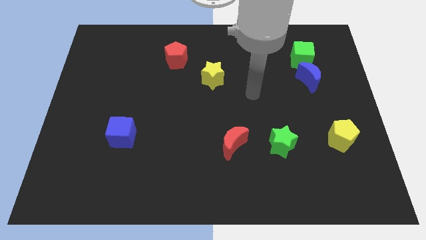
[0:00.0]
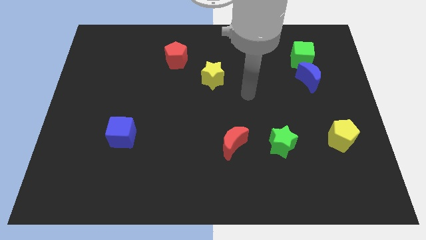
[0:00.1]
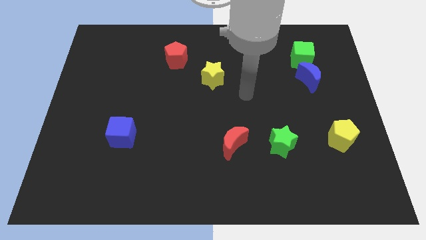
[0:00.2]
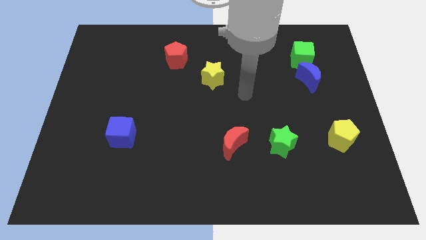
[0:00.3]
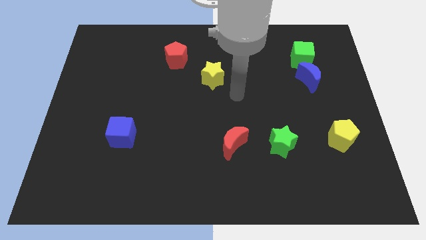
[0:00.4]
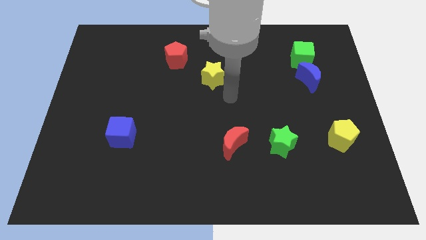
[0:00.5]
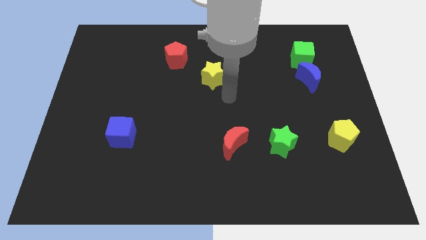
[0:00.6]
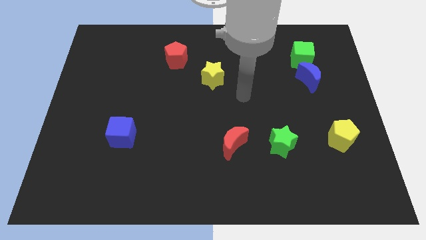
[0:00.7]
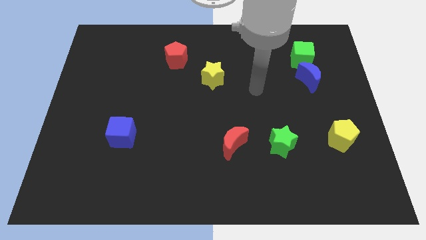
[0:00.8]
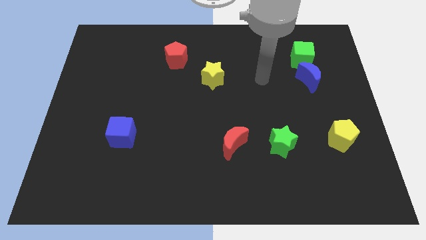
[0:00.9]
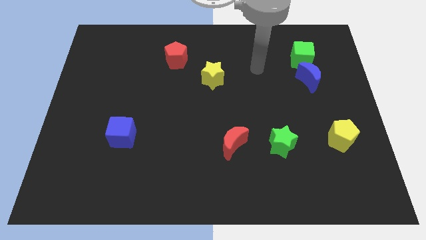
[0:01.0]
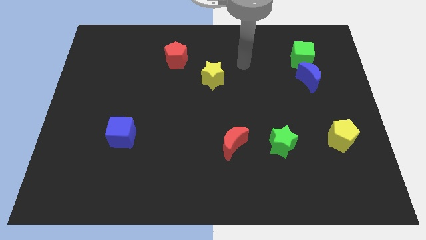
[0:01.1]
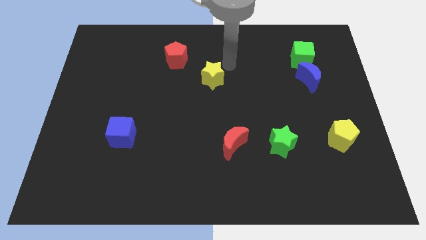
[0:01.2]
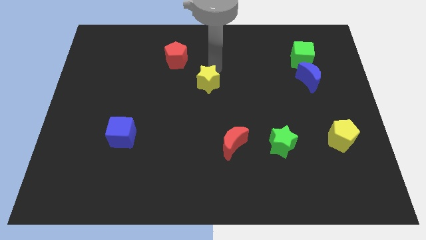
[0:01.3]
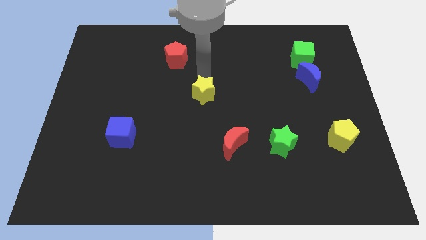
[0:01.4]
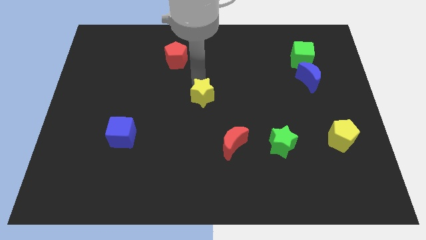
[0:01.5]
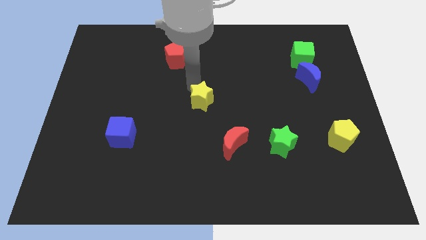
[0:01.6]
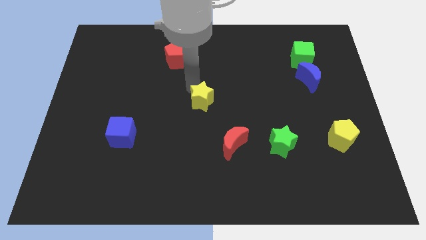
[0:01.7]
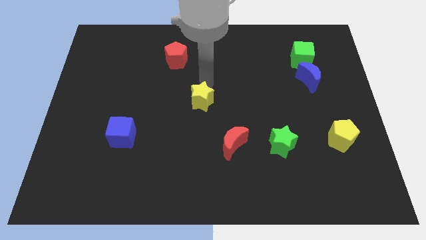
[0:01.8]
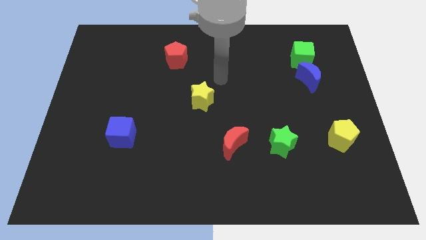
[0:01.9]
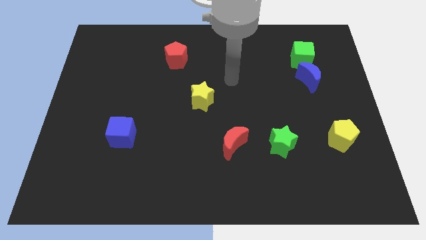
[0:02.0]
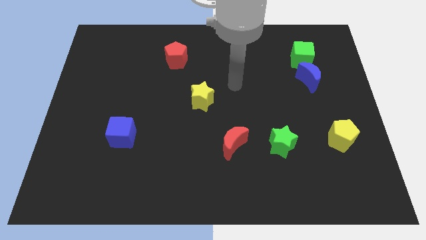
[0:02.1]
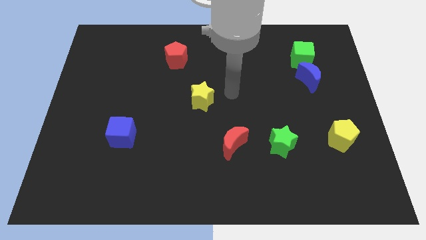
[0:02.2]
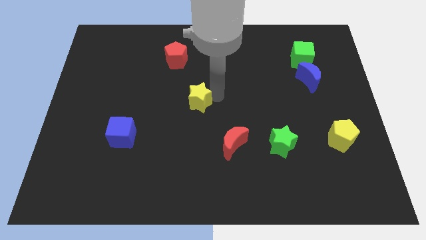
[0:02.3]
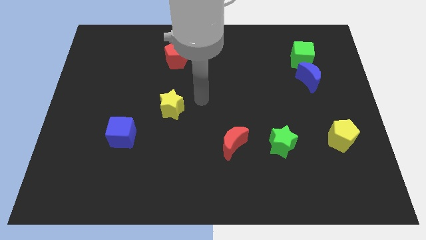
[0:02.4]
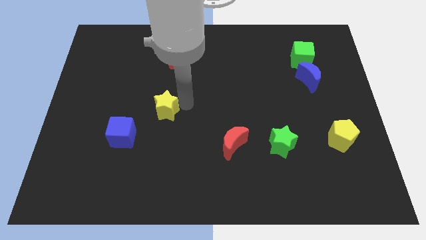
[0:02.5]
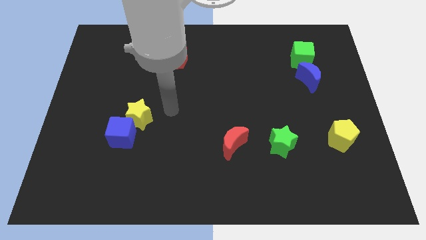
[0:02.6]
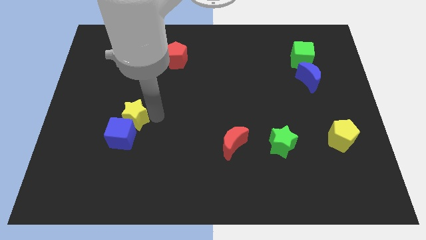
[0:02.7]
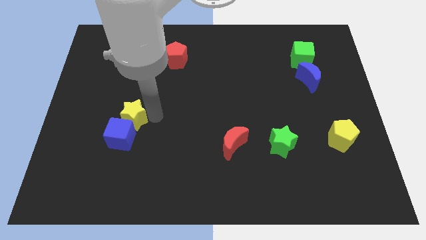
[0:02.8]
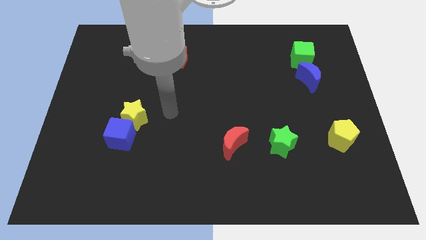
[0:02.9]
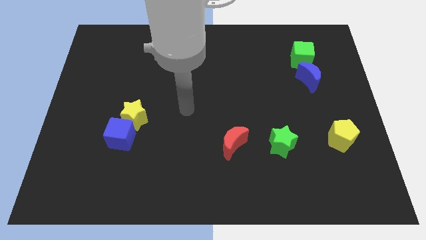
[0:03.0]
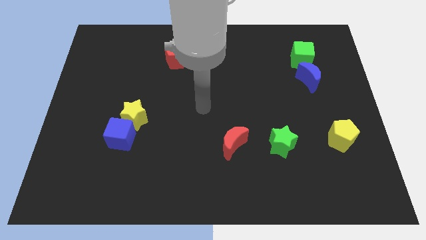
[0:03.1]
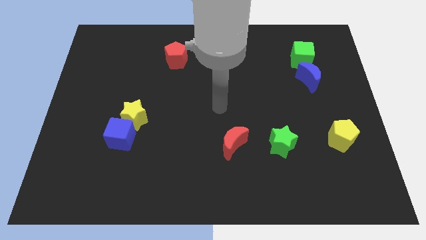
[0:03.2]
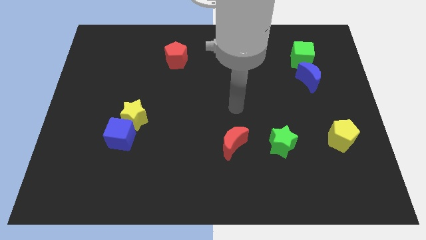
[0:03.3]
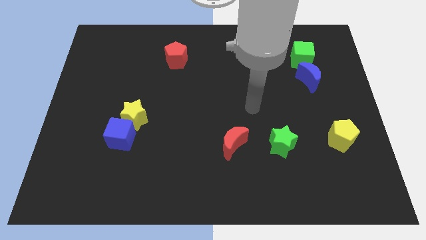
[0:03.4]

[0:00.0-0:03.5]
move the yellow star into the top side of the blue cube

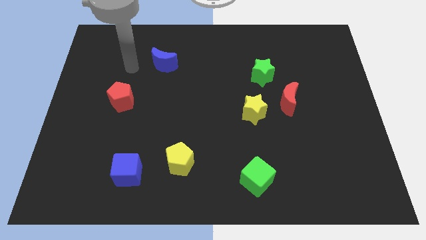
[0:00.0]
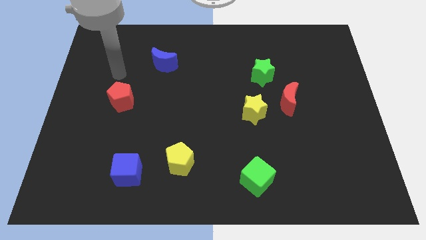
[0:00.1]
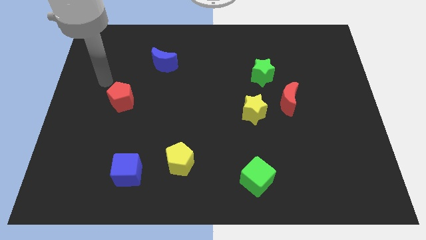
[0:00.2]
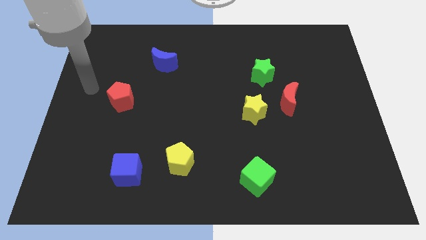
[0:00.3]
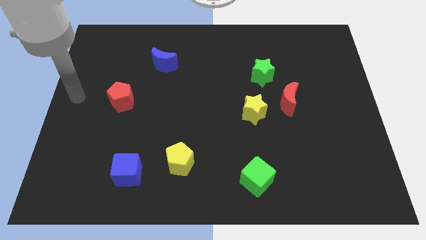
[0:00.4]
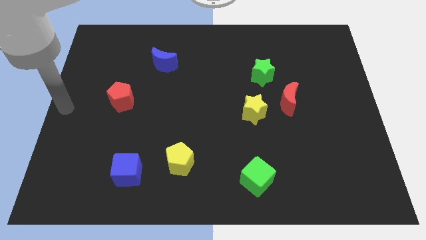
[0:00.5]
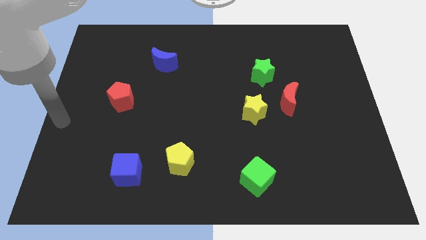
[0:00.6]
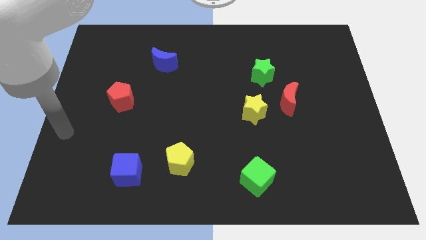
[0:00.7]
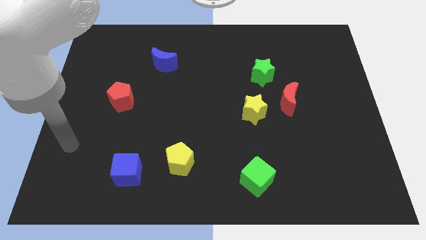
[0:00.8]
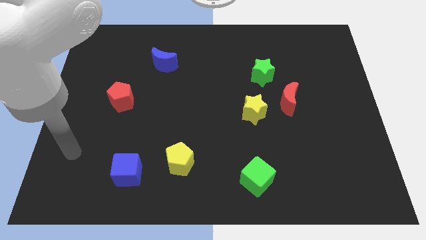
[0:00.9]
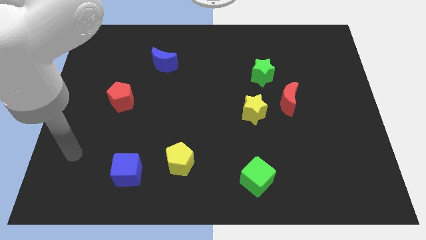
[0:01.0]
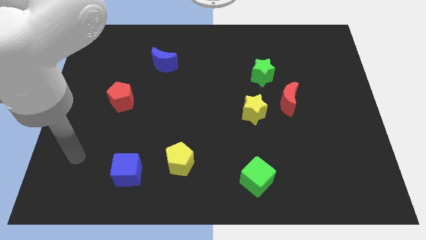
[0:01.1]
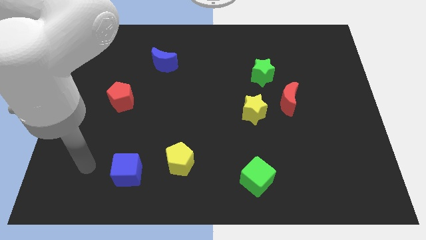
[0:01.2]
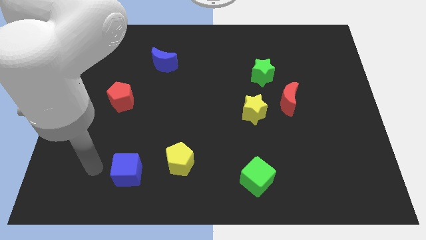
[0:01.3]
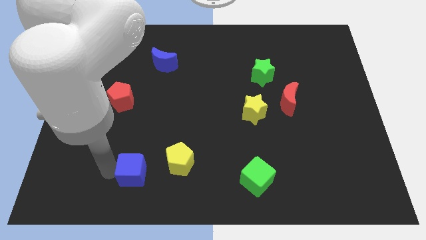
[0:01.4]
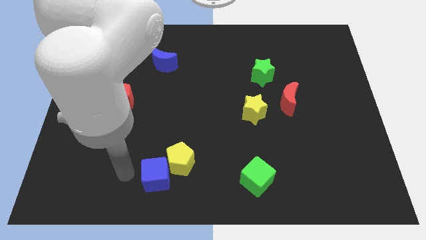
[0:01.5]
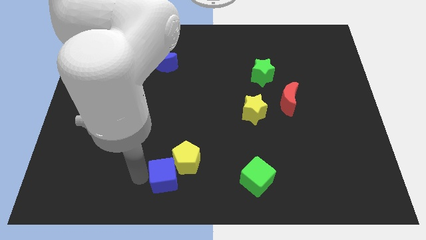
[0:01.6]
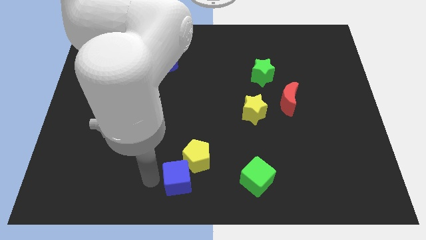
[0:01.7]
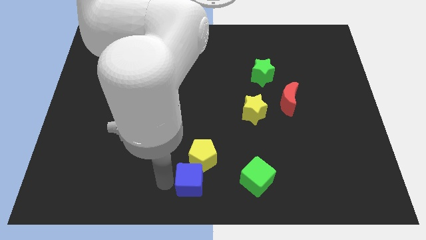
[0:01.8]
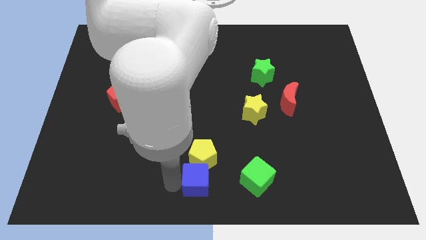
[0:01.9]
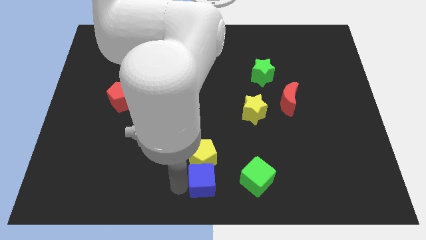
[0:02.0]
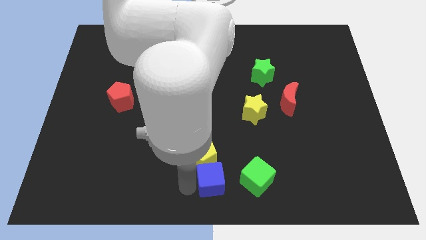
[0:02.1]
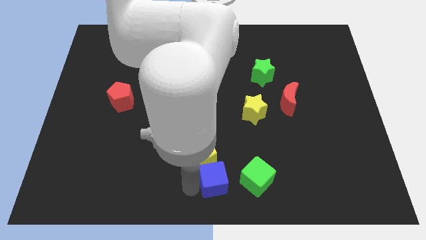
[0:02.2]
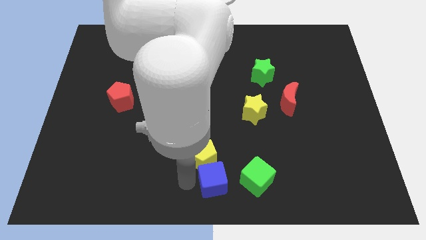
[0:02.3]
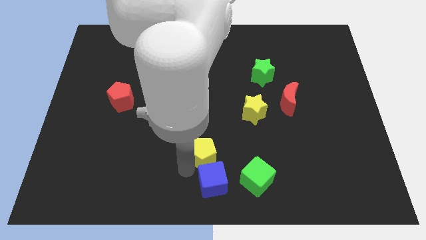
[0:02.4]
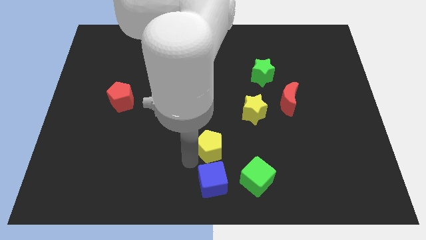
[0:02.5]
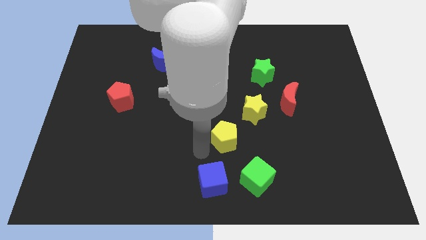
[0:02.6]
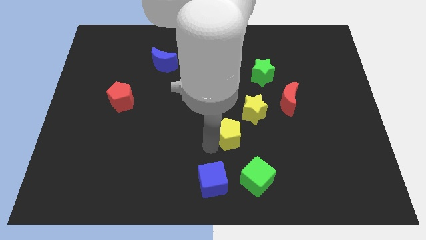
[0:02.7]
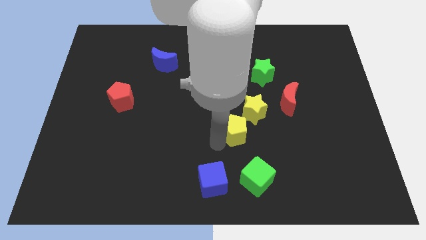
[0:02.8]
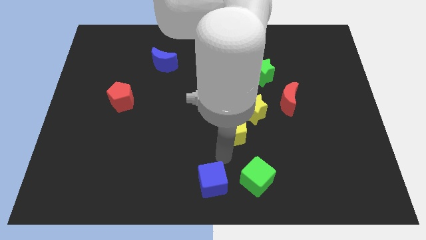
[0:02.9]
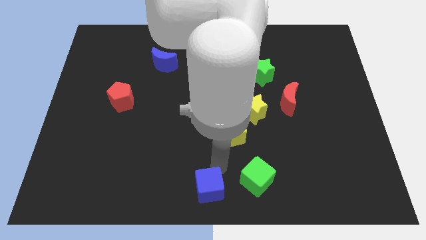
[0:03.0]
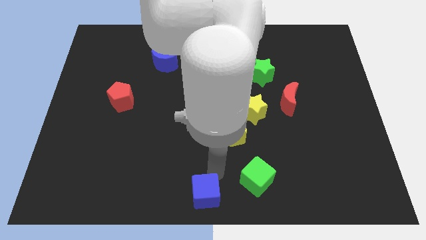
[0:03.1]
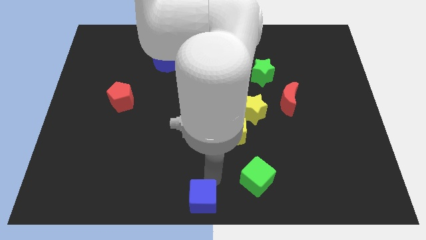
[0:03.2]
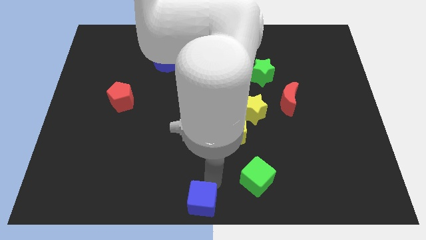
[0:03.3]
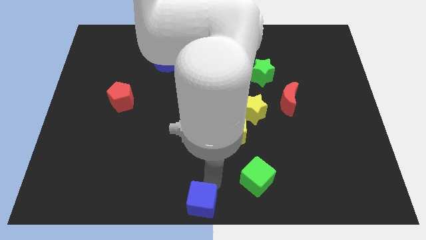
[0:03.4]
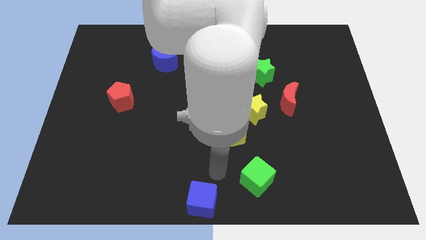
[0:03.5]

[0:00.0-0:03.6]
place the blue cube at the bottom center

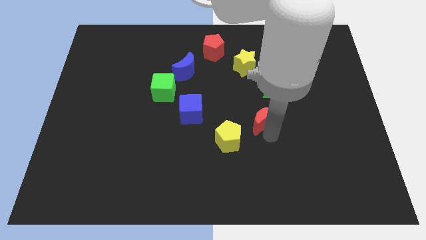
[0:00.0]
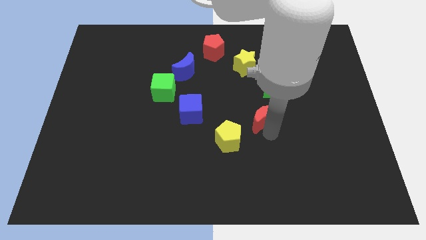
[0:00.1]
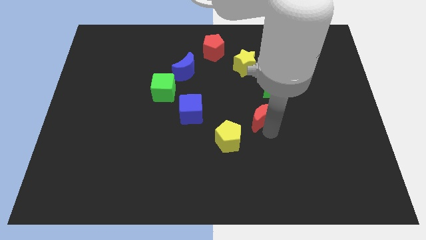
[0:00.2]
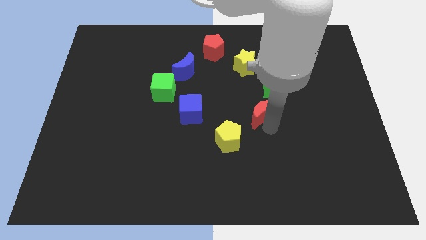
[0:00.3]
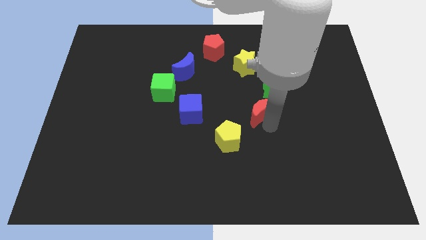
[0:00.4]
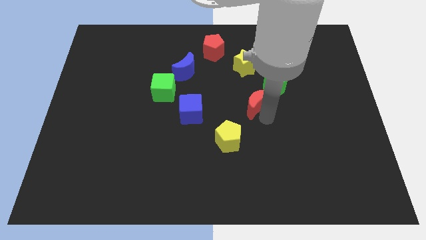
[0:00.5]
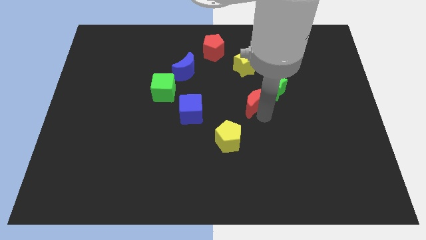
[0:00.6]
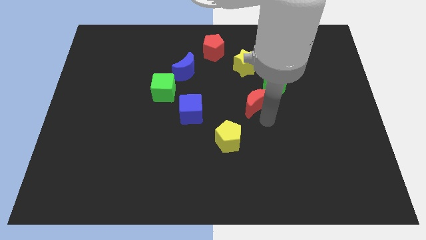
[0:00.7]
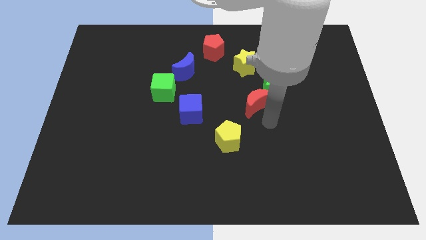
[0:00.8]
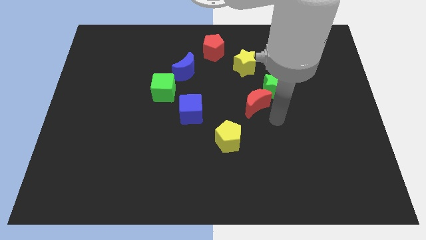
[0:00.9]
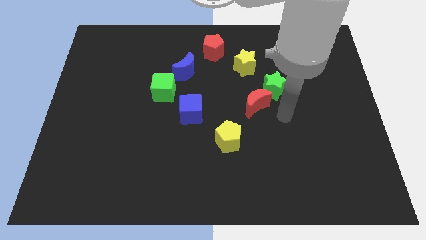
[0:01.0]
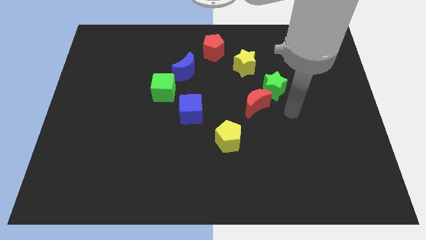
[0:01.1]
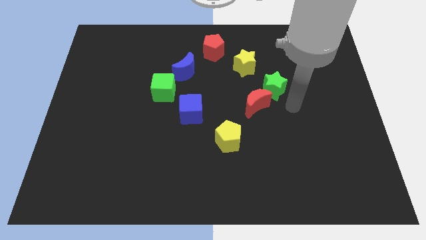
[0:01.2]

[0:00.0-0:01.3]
place the red crescent towards the bottom left side of the green star

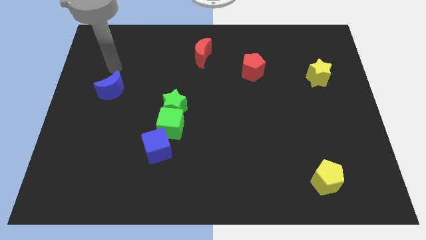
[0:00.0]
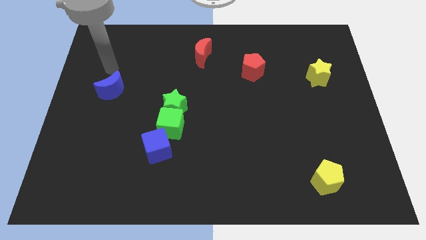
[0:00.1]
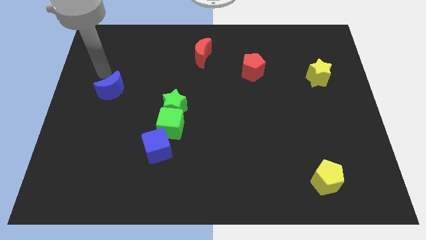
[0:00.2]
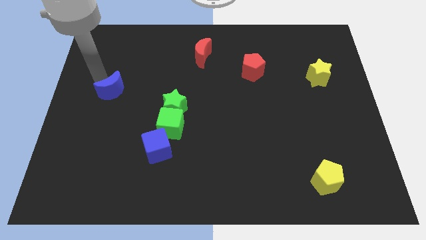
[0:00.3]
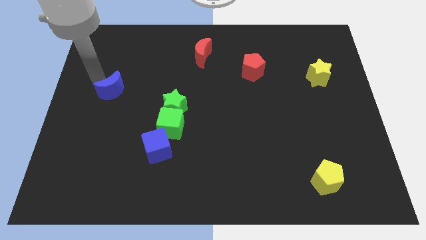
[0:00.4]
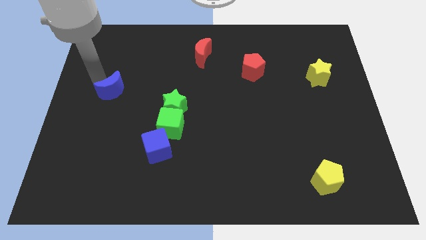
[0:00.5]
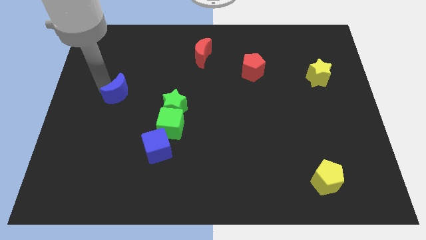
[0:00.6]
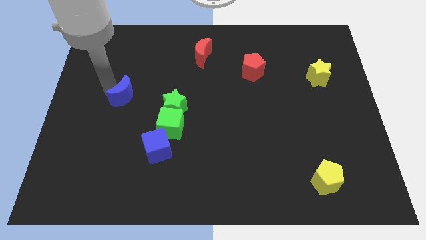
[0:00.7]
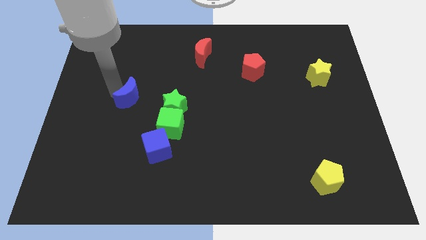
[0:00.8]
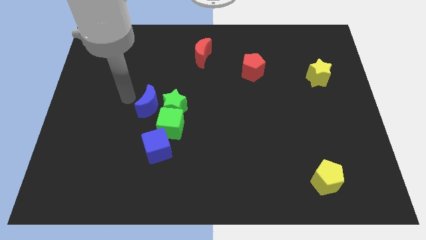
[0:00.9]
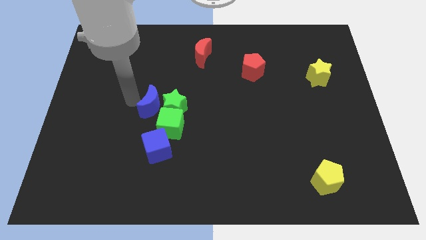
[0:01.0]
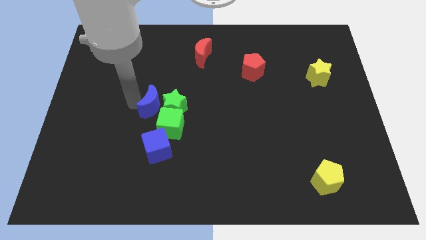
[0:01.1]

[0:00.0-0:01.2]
move the blue moon to the right of green star
